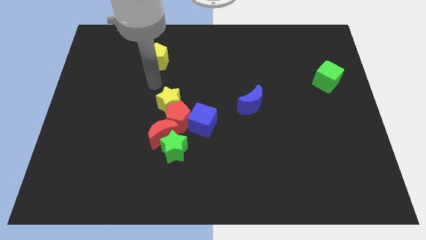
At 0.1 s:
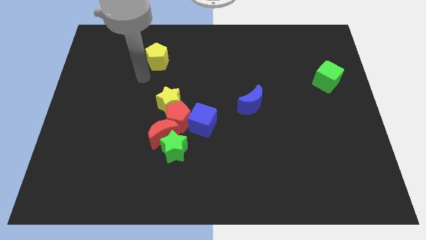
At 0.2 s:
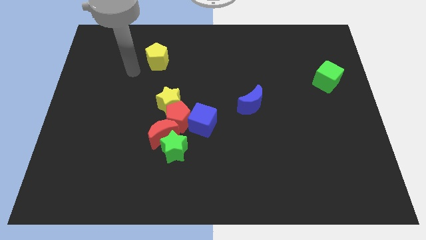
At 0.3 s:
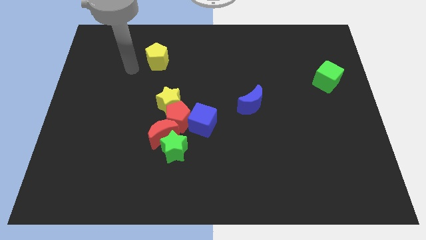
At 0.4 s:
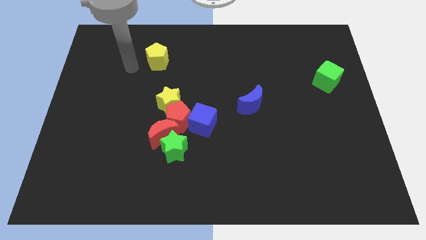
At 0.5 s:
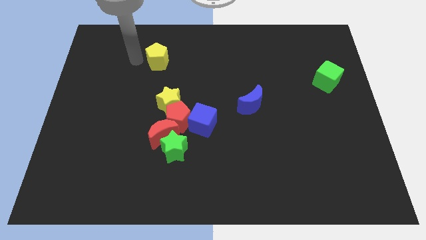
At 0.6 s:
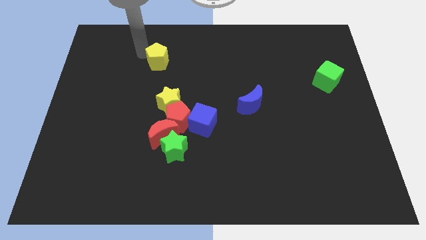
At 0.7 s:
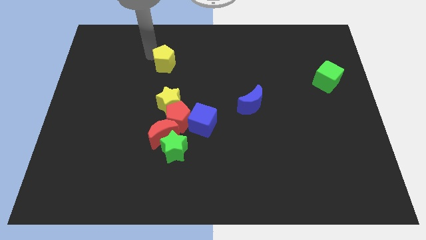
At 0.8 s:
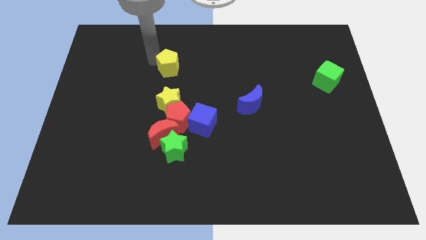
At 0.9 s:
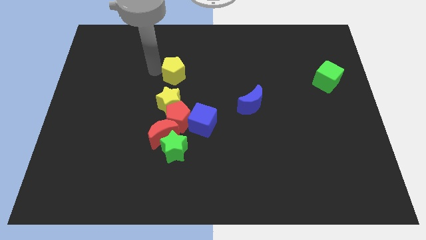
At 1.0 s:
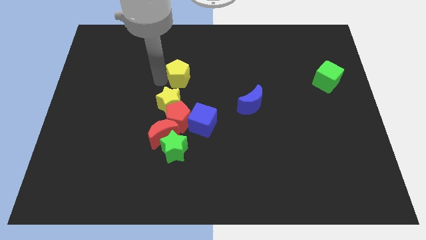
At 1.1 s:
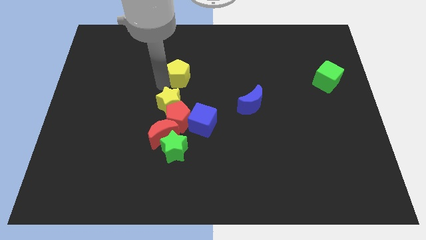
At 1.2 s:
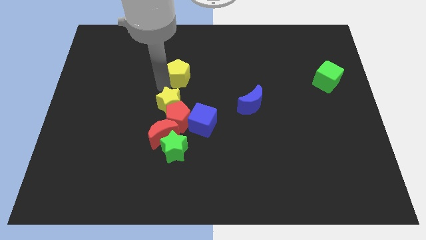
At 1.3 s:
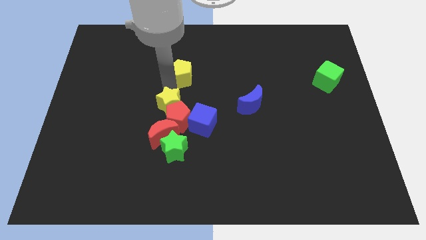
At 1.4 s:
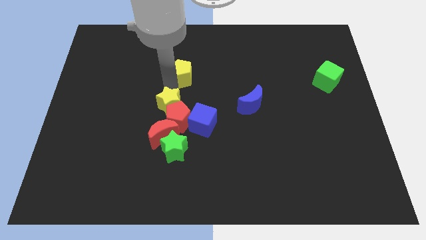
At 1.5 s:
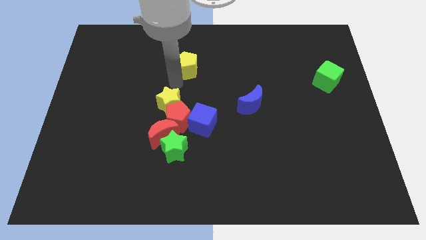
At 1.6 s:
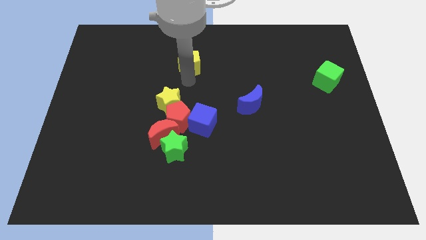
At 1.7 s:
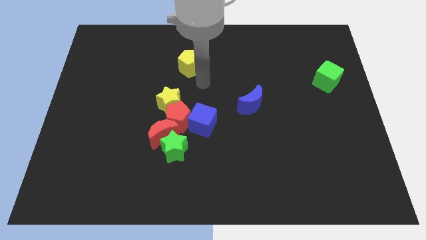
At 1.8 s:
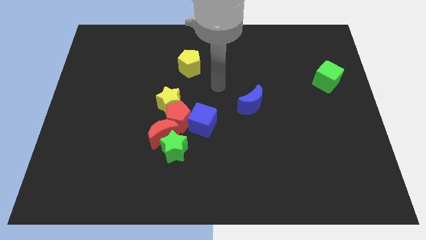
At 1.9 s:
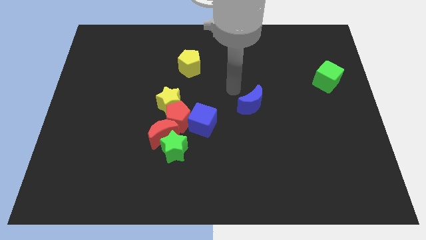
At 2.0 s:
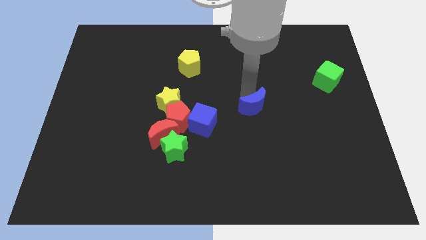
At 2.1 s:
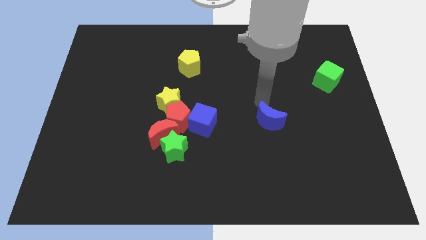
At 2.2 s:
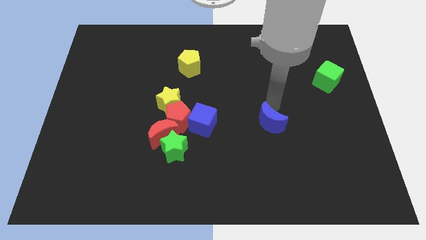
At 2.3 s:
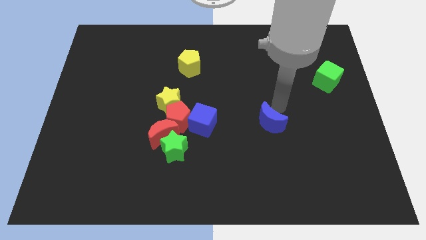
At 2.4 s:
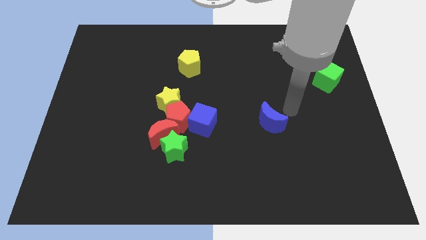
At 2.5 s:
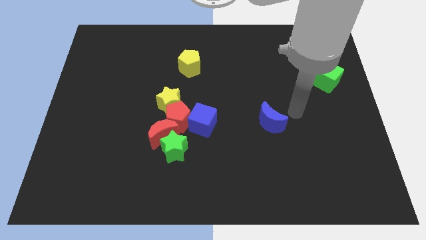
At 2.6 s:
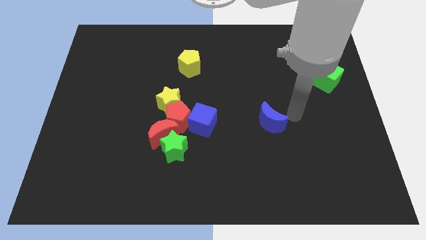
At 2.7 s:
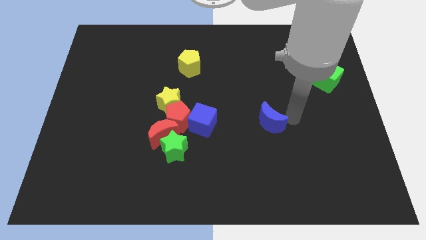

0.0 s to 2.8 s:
push the yellow pentagon and blue crescent towards the right side of the board

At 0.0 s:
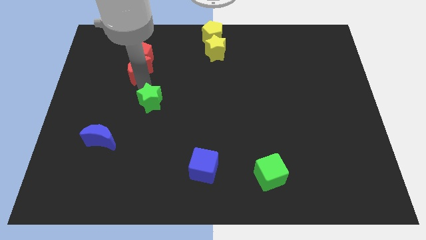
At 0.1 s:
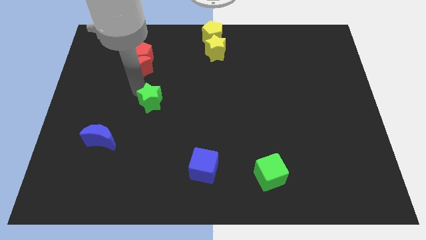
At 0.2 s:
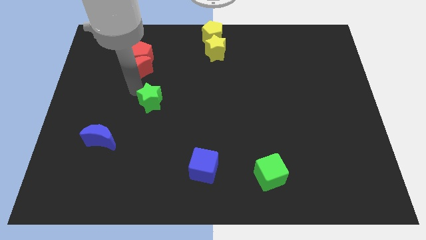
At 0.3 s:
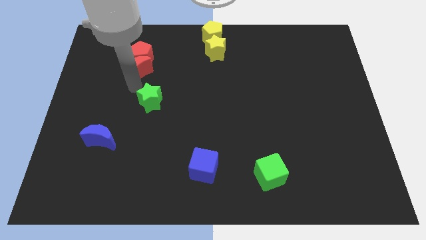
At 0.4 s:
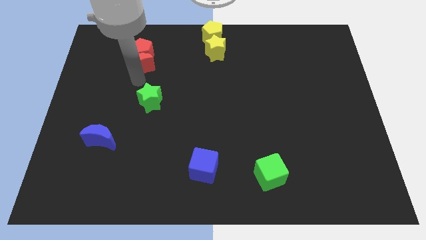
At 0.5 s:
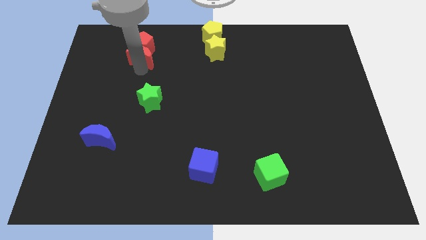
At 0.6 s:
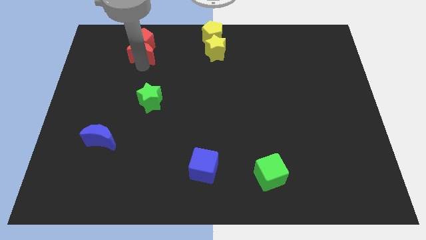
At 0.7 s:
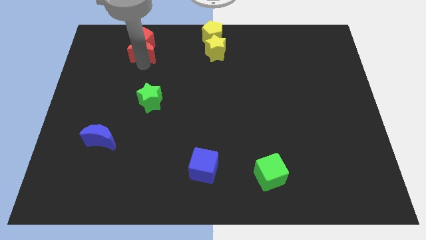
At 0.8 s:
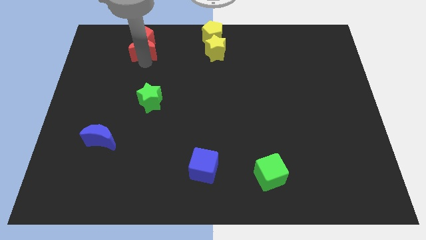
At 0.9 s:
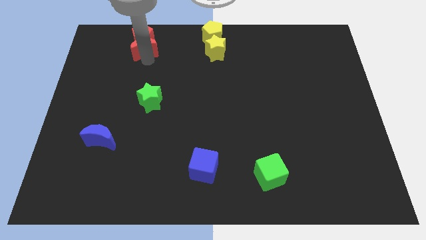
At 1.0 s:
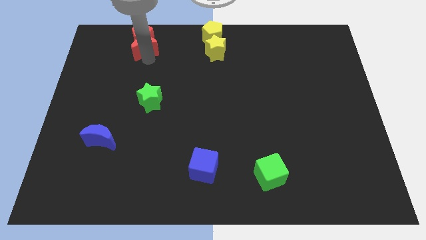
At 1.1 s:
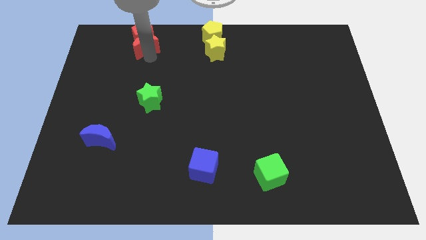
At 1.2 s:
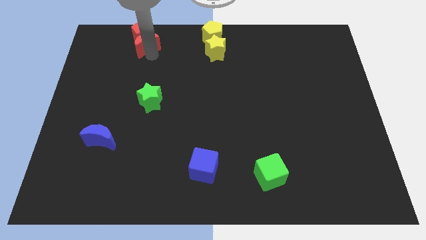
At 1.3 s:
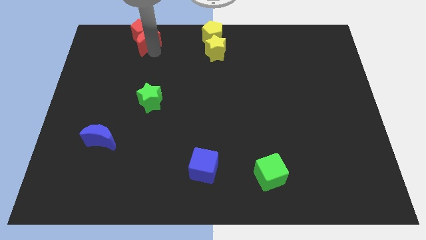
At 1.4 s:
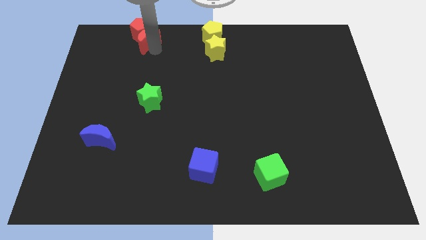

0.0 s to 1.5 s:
push the red moon along with the red pentagon to the top side of the board

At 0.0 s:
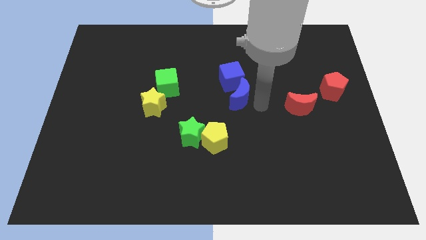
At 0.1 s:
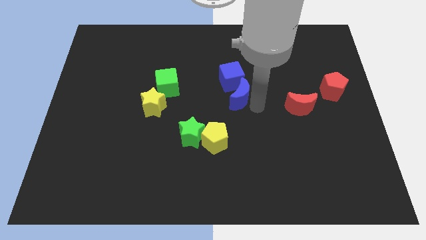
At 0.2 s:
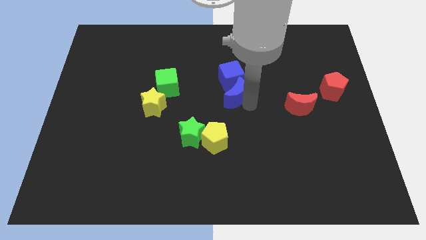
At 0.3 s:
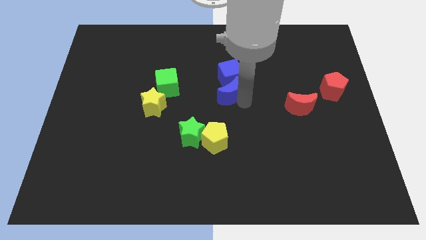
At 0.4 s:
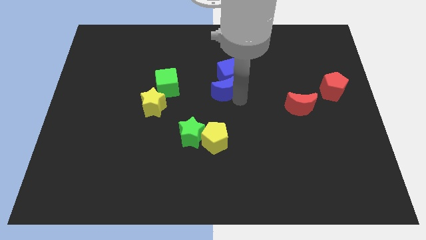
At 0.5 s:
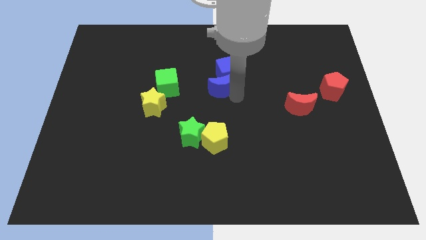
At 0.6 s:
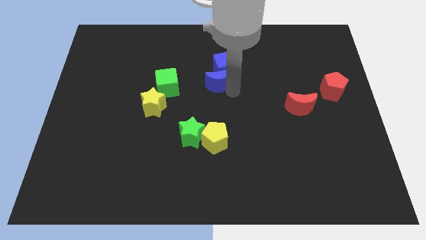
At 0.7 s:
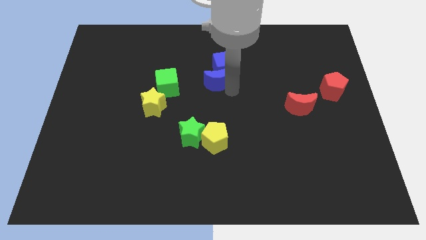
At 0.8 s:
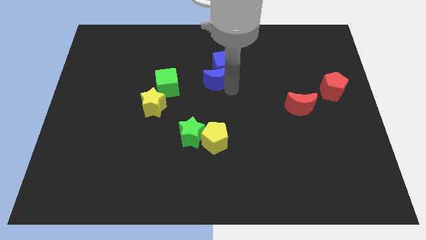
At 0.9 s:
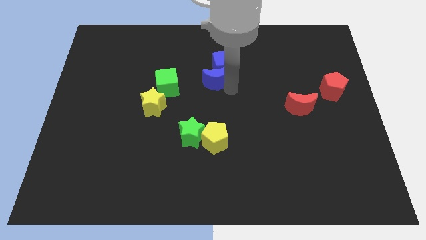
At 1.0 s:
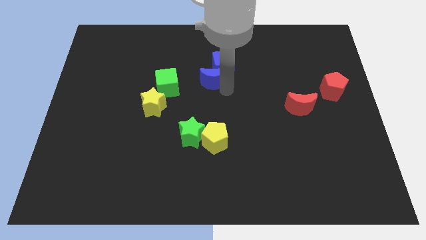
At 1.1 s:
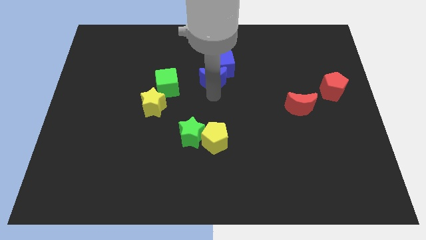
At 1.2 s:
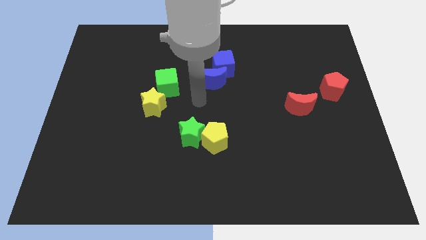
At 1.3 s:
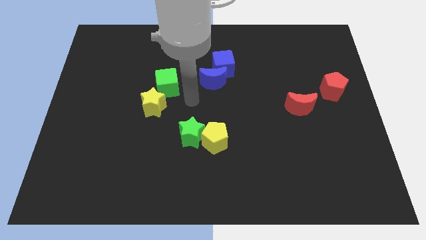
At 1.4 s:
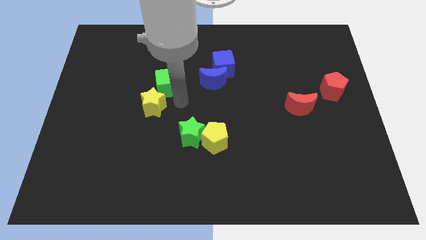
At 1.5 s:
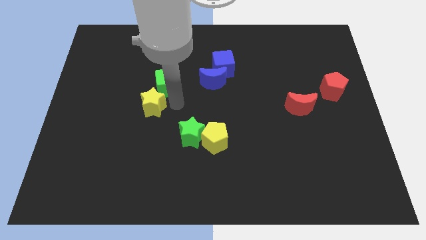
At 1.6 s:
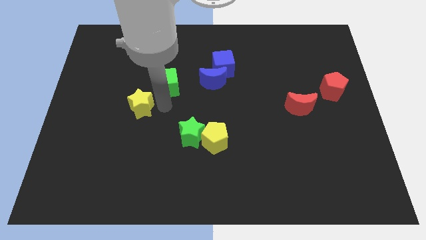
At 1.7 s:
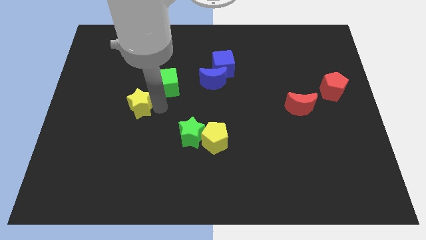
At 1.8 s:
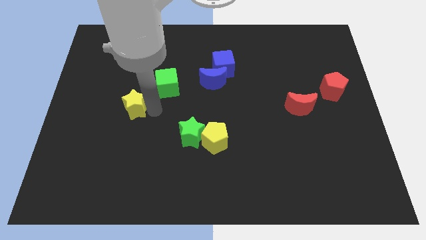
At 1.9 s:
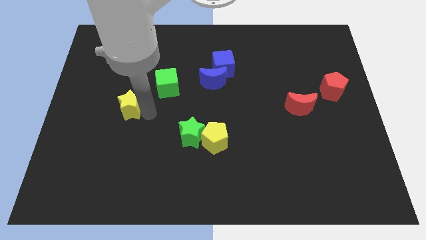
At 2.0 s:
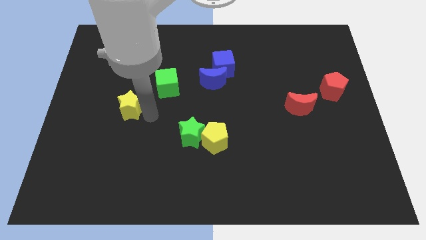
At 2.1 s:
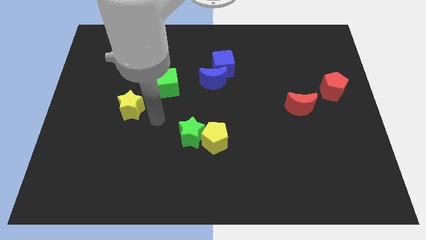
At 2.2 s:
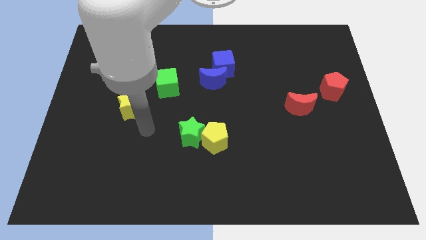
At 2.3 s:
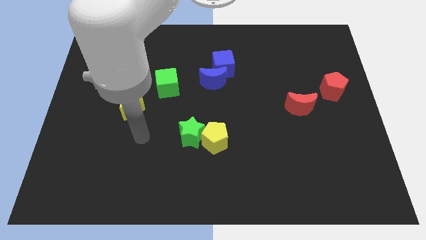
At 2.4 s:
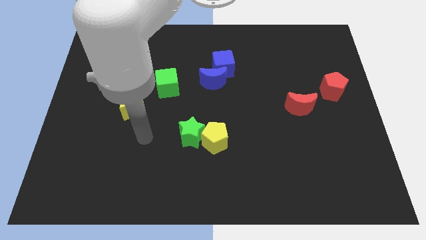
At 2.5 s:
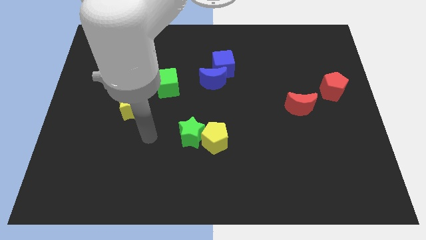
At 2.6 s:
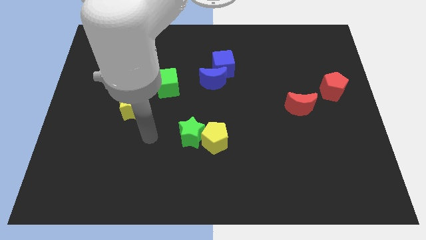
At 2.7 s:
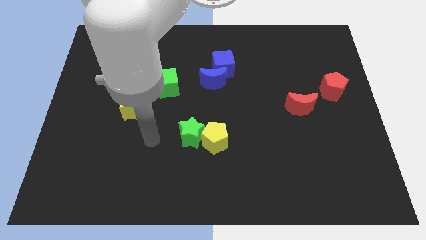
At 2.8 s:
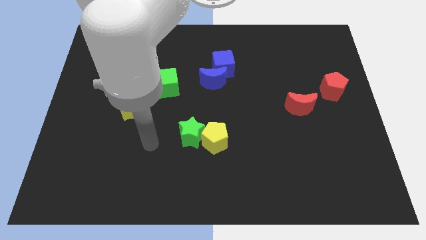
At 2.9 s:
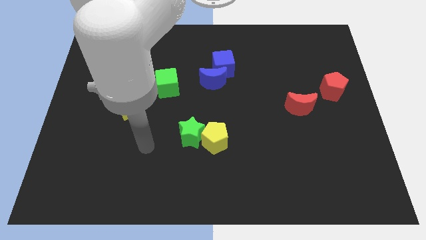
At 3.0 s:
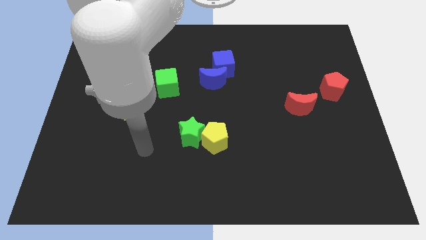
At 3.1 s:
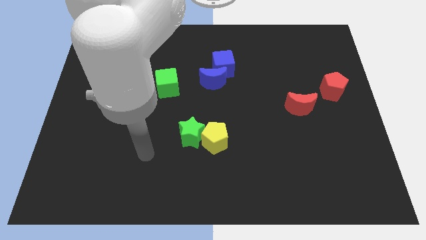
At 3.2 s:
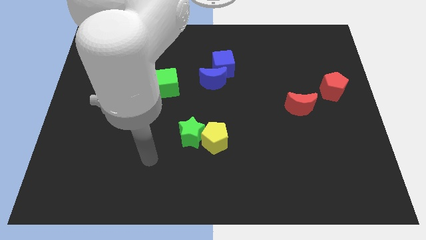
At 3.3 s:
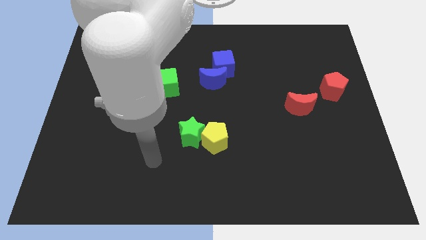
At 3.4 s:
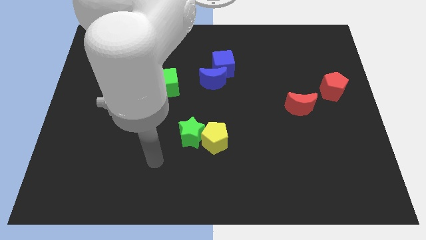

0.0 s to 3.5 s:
move the blue moon into the blue cube

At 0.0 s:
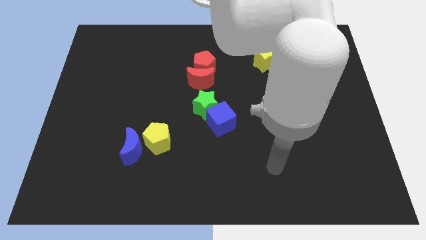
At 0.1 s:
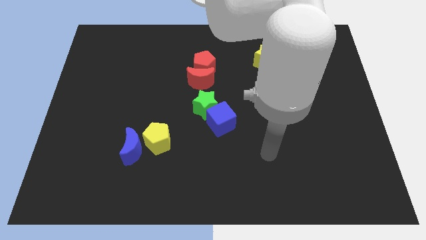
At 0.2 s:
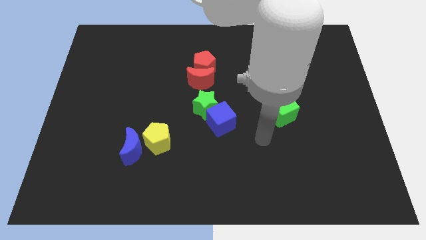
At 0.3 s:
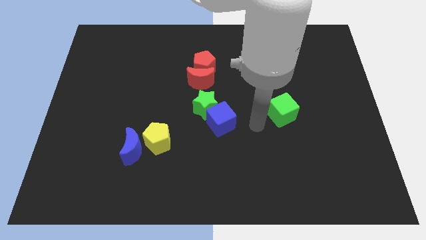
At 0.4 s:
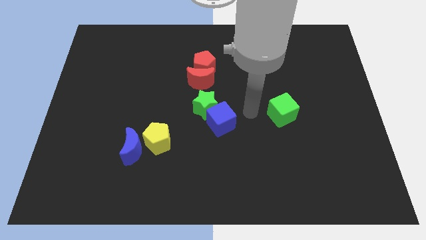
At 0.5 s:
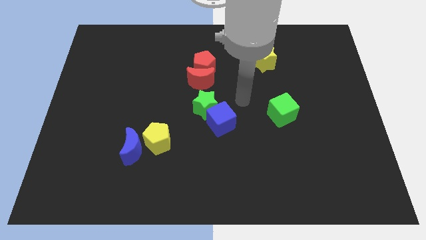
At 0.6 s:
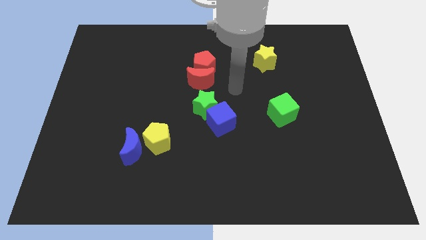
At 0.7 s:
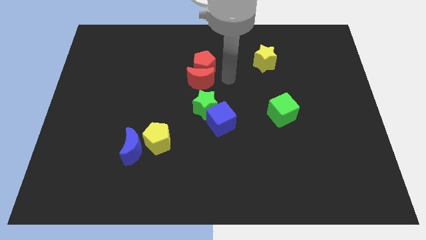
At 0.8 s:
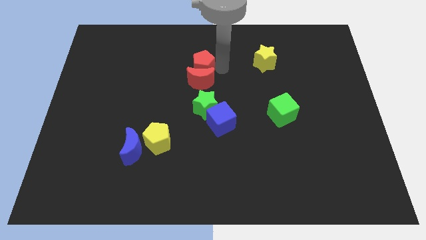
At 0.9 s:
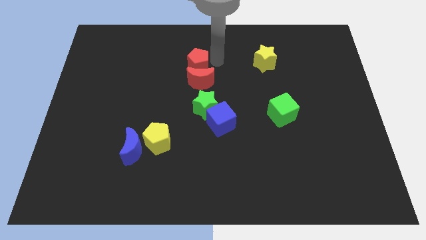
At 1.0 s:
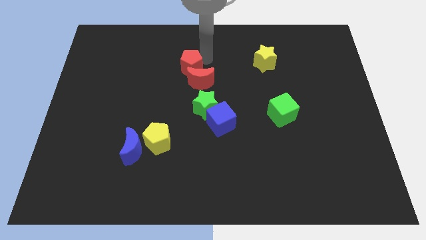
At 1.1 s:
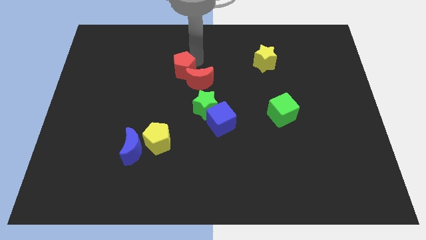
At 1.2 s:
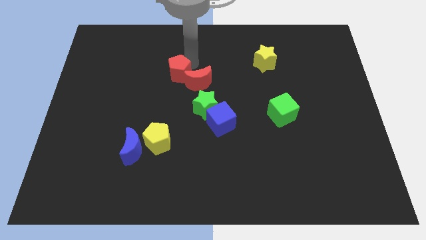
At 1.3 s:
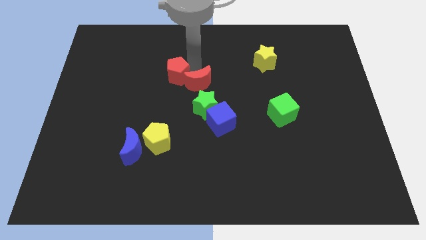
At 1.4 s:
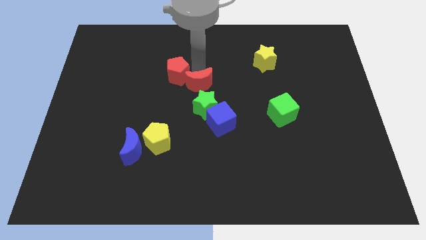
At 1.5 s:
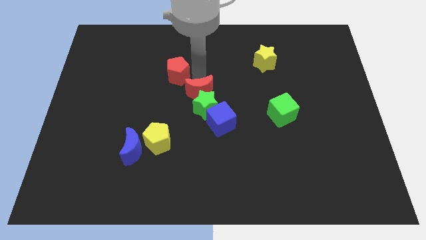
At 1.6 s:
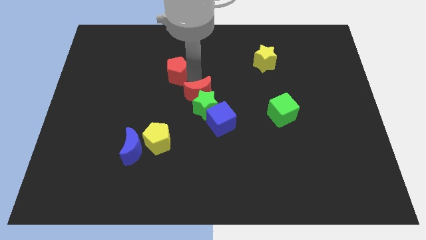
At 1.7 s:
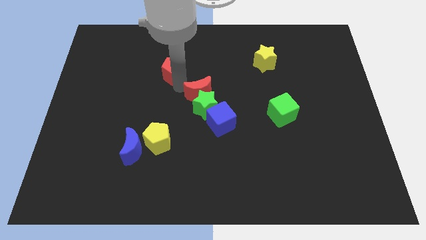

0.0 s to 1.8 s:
separate the red blocks
